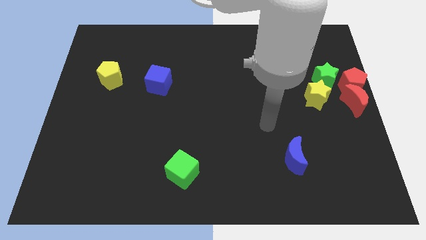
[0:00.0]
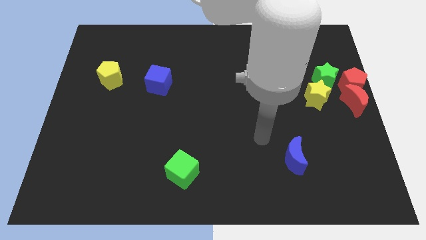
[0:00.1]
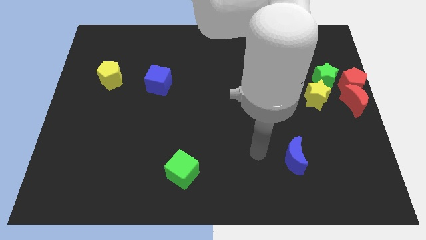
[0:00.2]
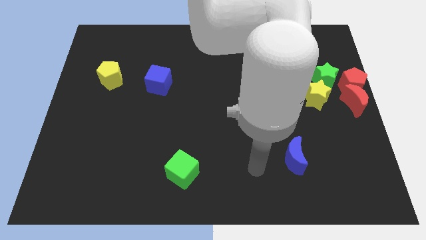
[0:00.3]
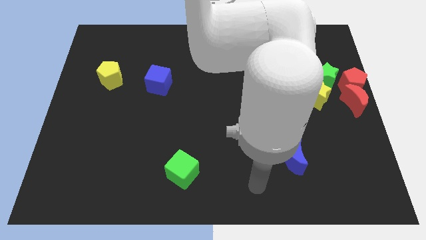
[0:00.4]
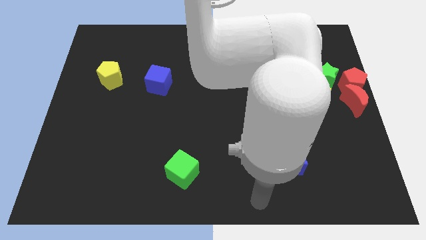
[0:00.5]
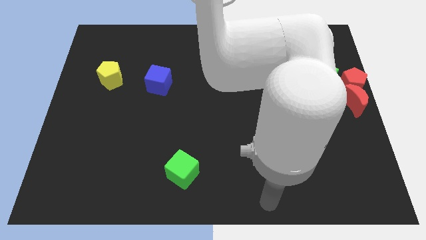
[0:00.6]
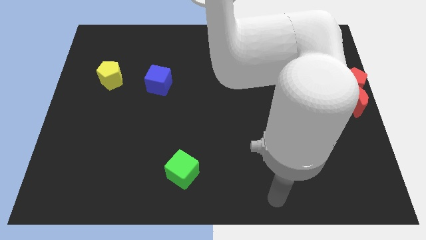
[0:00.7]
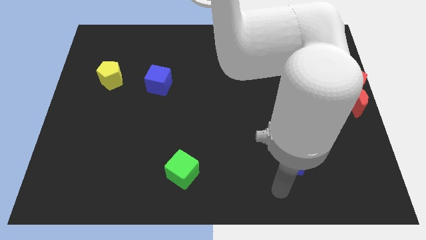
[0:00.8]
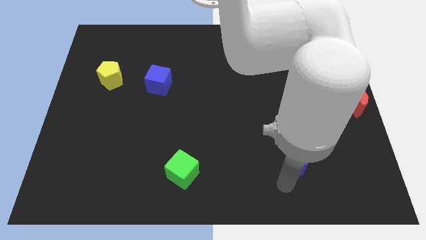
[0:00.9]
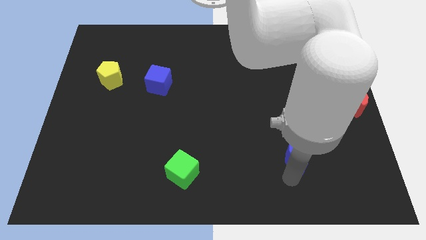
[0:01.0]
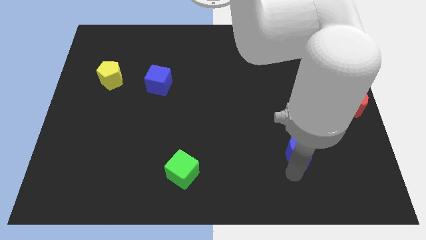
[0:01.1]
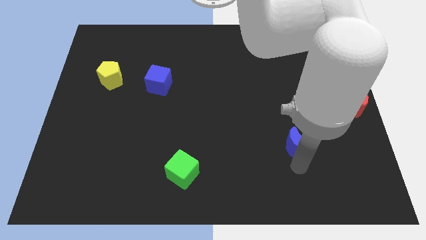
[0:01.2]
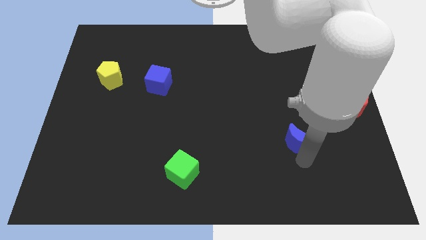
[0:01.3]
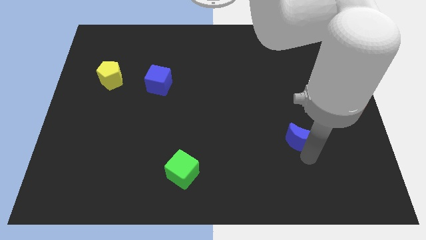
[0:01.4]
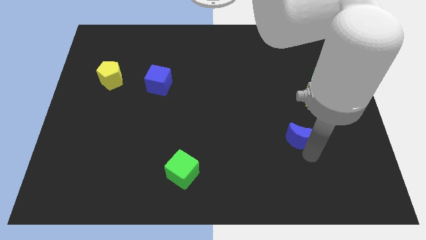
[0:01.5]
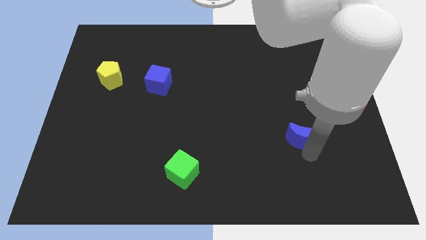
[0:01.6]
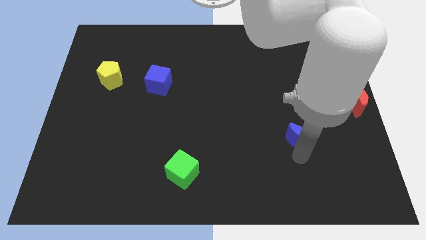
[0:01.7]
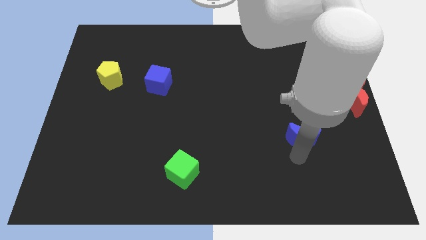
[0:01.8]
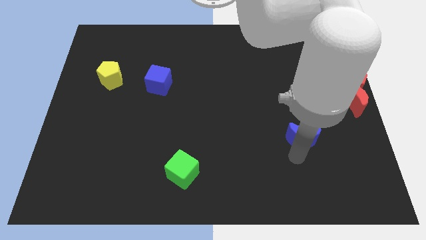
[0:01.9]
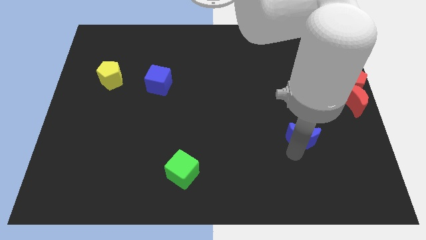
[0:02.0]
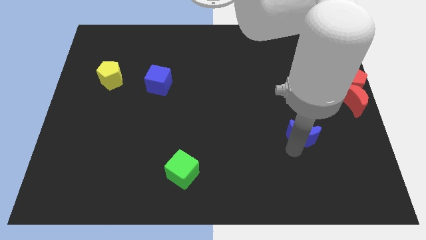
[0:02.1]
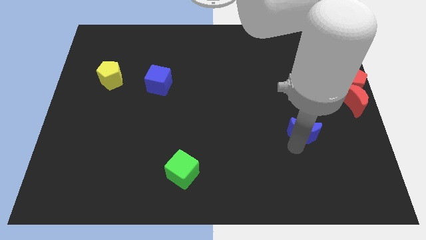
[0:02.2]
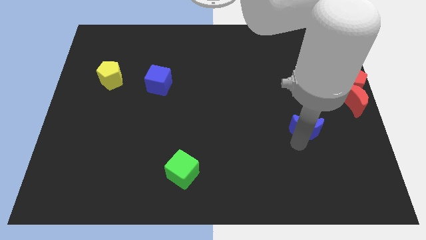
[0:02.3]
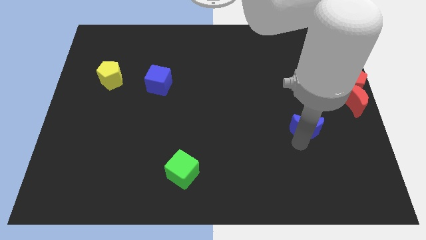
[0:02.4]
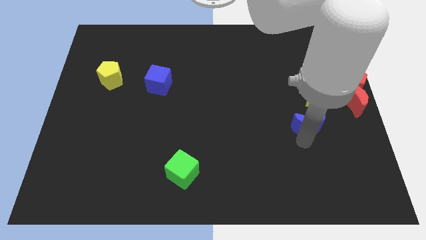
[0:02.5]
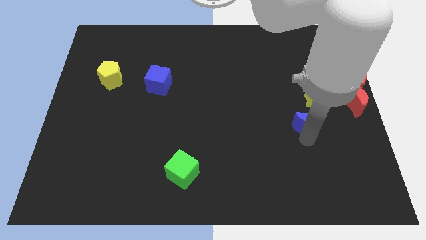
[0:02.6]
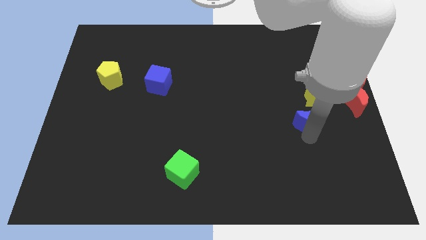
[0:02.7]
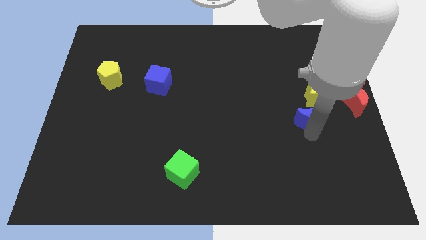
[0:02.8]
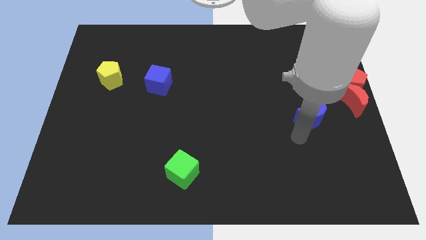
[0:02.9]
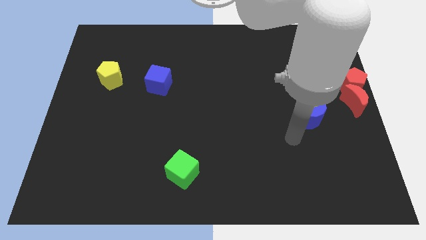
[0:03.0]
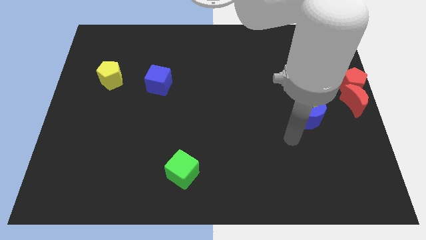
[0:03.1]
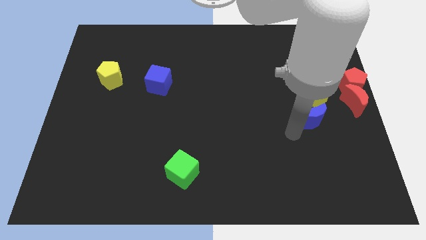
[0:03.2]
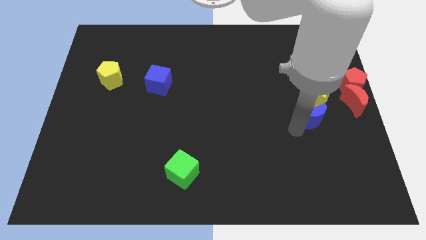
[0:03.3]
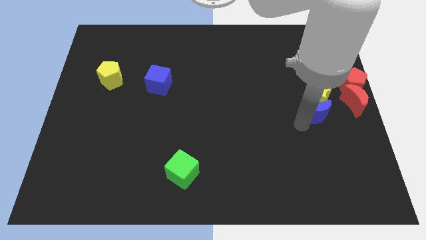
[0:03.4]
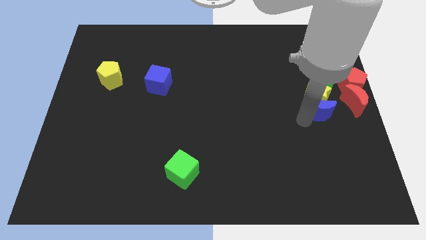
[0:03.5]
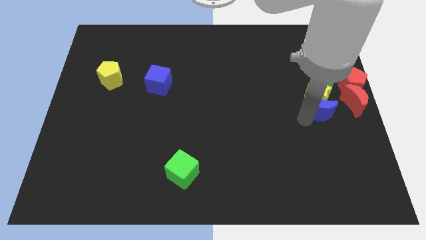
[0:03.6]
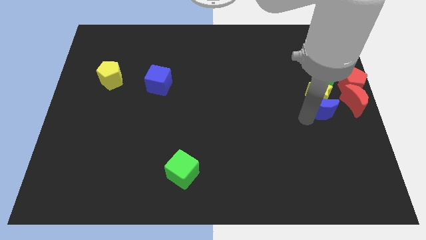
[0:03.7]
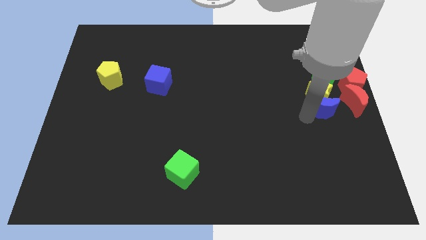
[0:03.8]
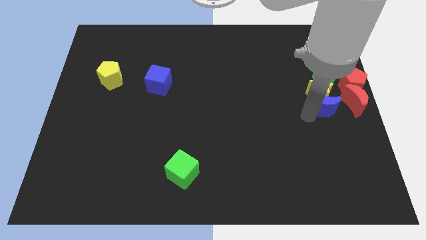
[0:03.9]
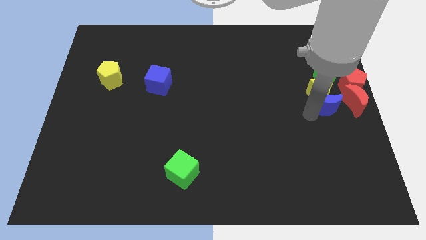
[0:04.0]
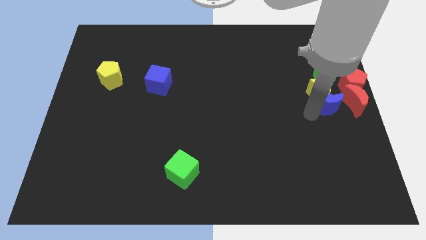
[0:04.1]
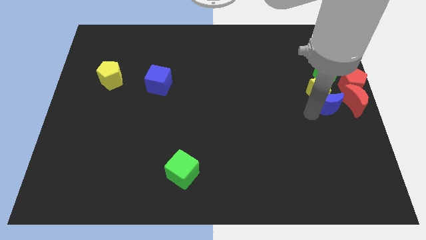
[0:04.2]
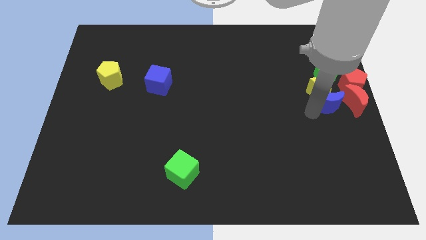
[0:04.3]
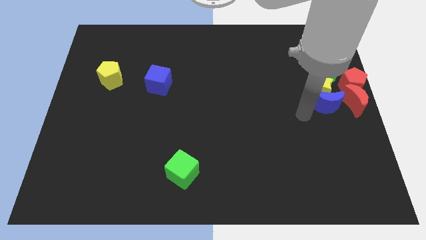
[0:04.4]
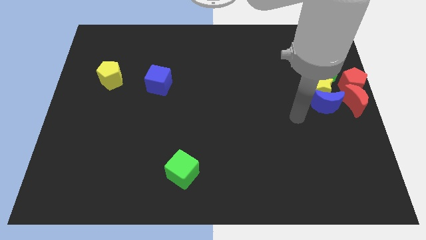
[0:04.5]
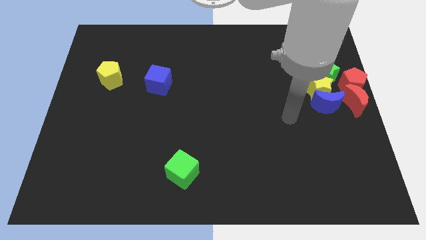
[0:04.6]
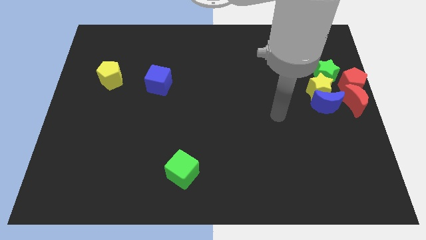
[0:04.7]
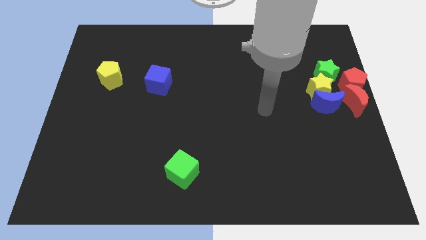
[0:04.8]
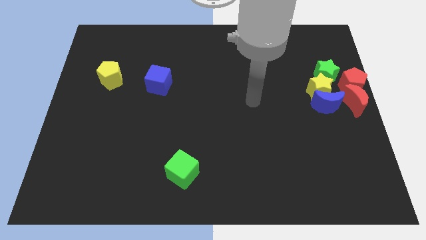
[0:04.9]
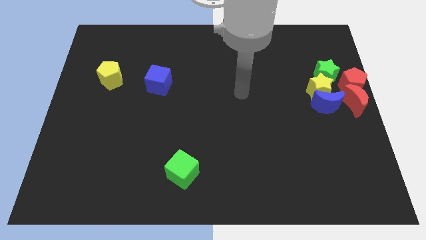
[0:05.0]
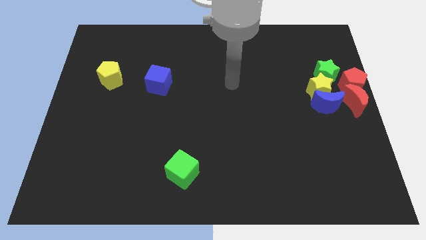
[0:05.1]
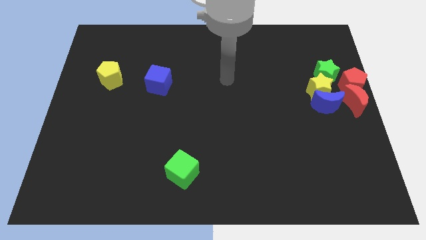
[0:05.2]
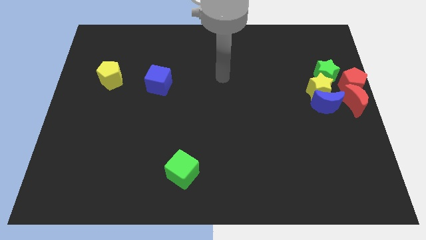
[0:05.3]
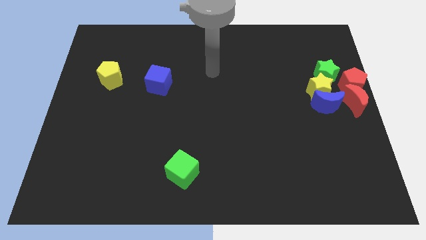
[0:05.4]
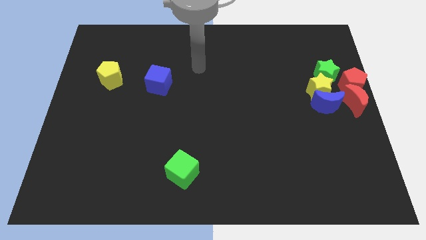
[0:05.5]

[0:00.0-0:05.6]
push the blue crescent into the yellow star

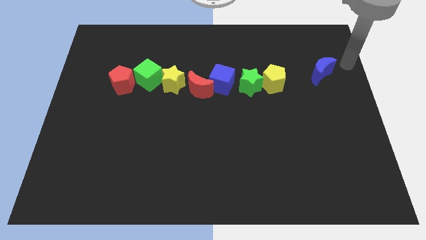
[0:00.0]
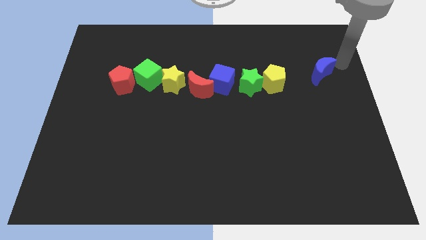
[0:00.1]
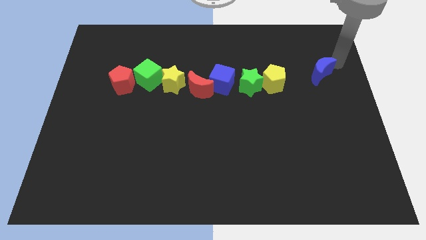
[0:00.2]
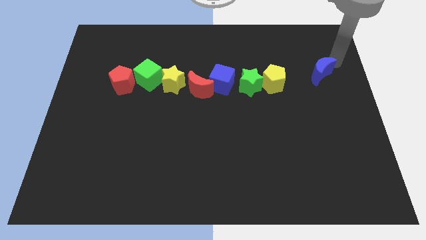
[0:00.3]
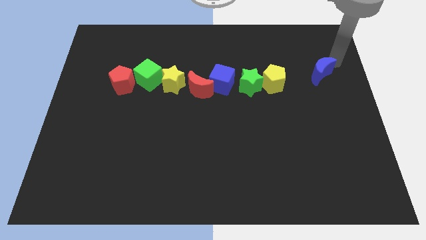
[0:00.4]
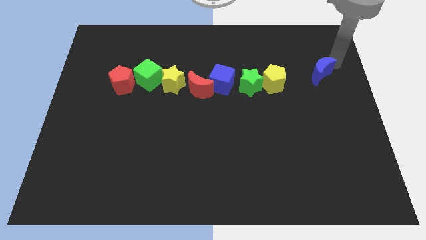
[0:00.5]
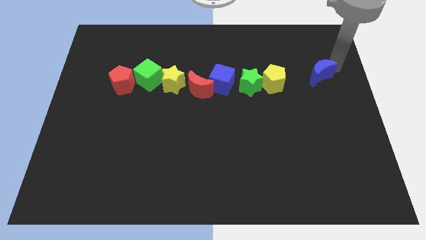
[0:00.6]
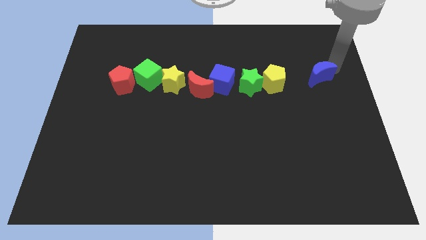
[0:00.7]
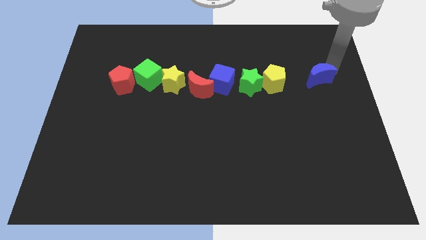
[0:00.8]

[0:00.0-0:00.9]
slide the blue crescent down slightly

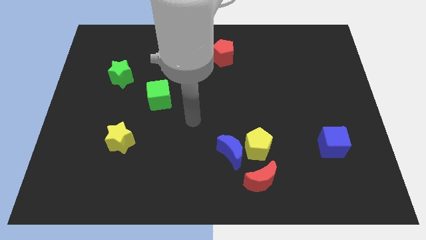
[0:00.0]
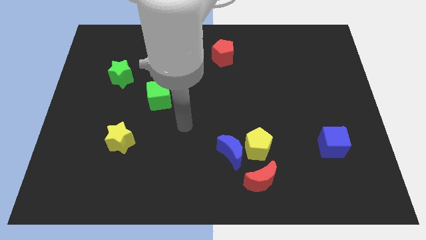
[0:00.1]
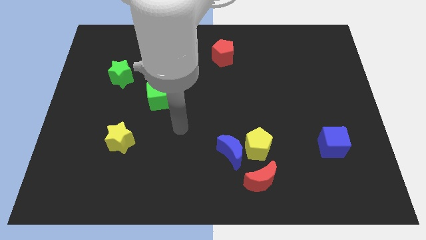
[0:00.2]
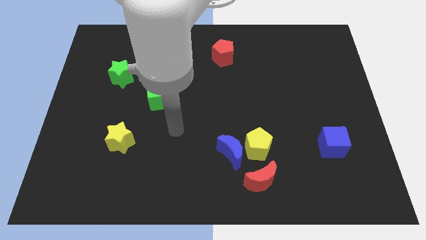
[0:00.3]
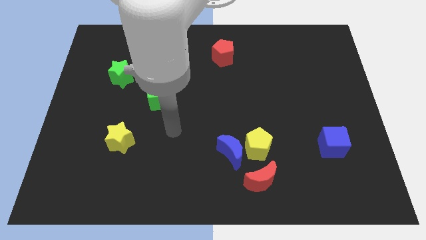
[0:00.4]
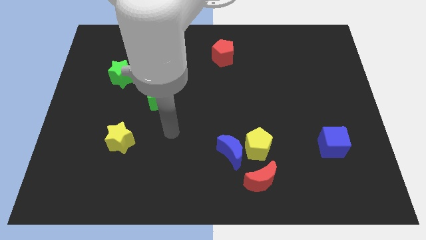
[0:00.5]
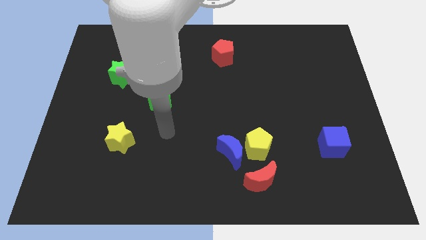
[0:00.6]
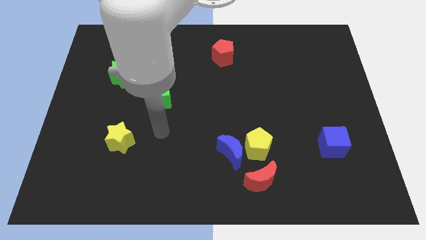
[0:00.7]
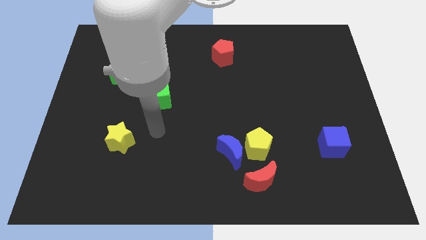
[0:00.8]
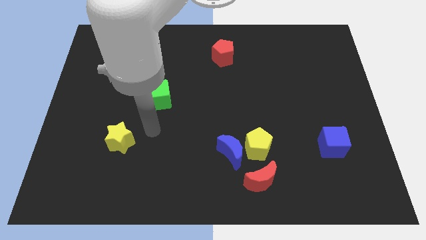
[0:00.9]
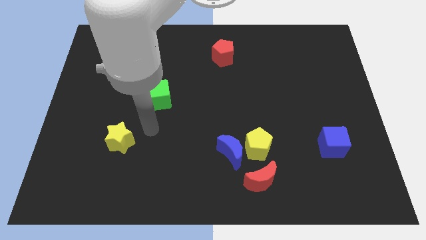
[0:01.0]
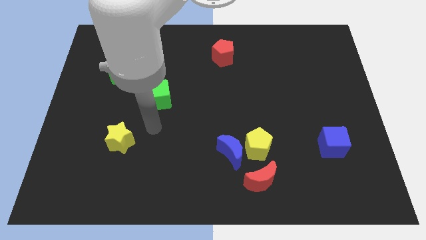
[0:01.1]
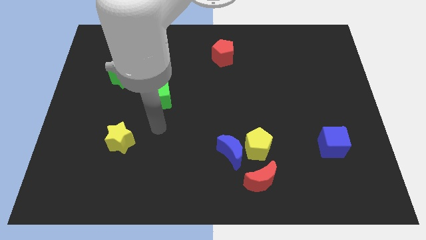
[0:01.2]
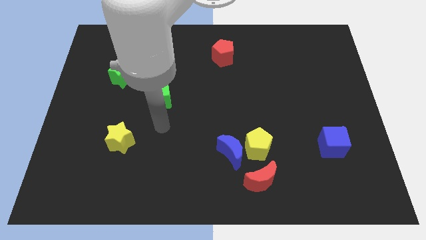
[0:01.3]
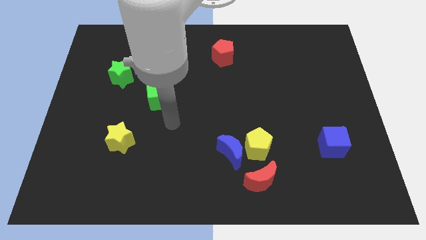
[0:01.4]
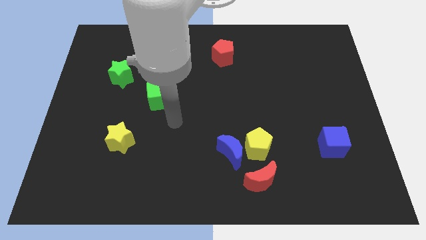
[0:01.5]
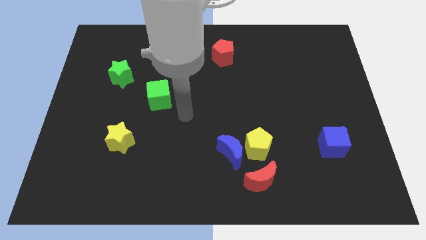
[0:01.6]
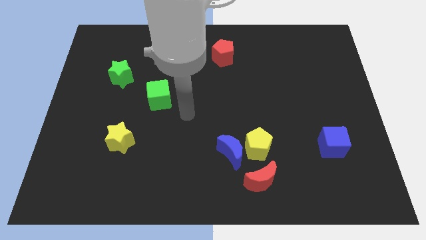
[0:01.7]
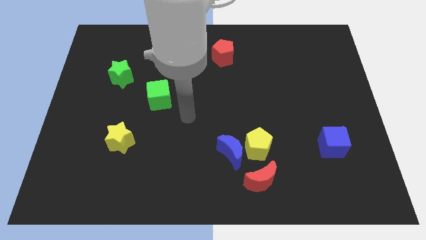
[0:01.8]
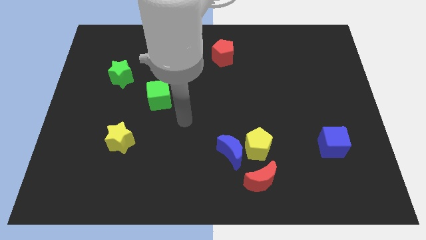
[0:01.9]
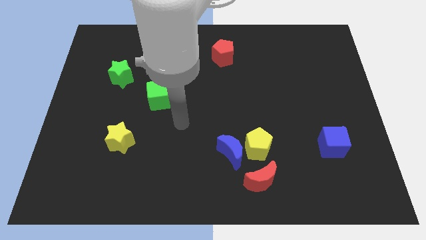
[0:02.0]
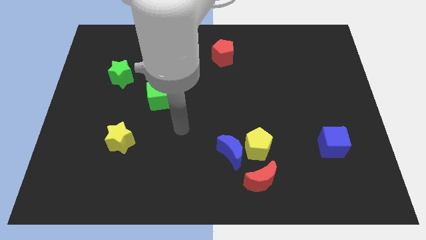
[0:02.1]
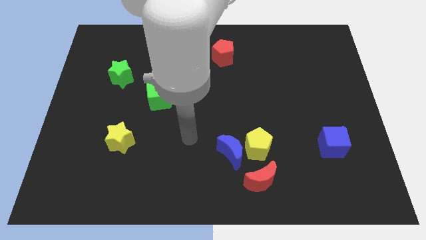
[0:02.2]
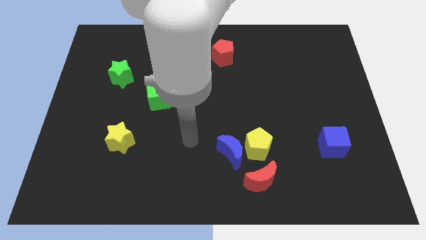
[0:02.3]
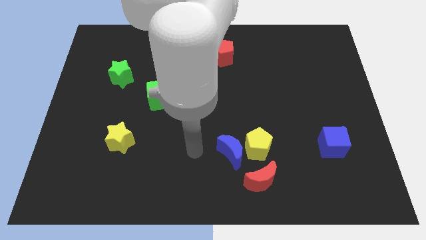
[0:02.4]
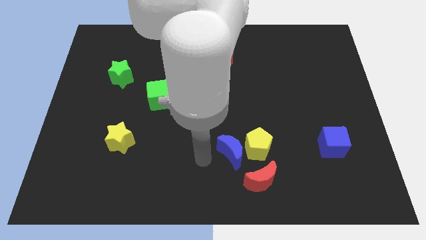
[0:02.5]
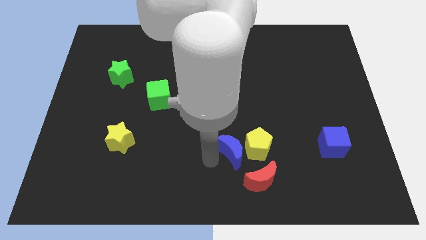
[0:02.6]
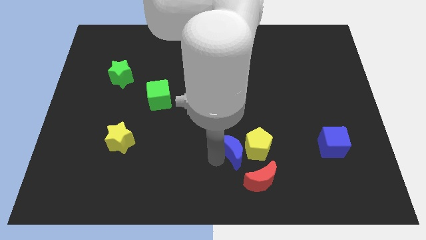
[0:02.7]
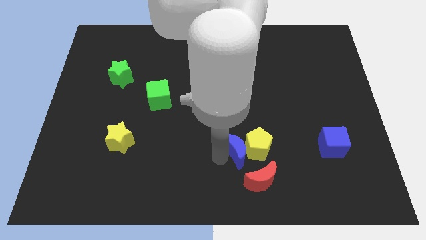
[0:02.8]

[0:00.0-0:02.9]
place your arm to the left of blue crescent
